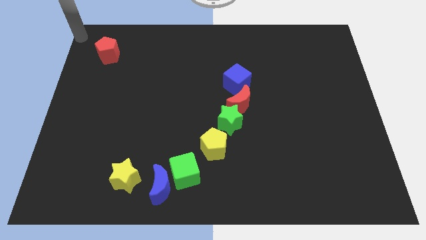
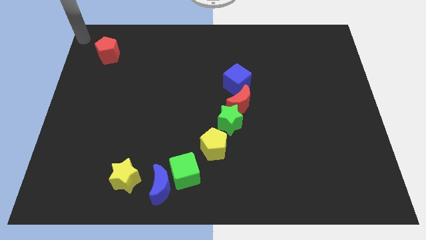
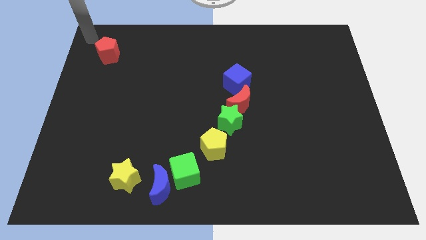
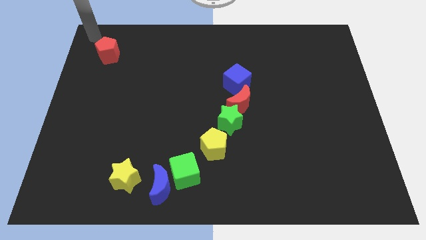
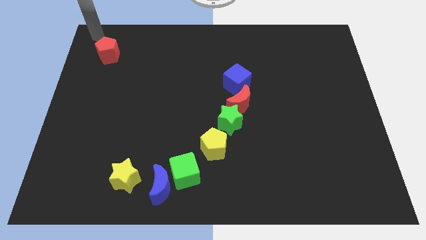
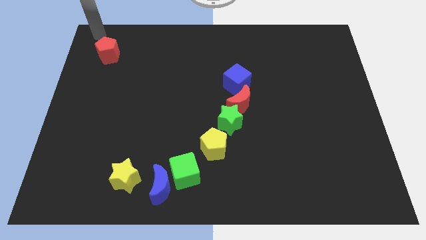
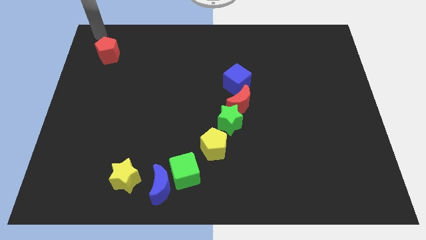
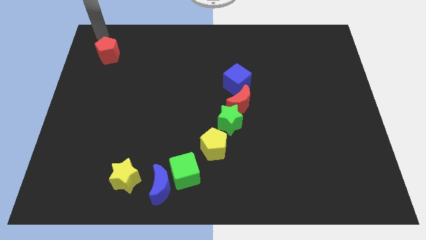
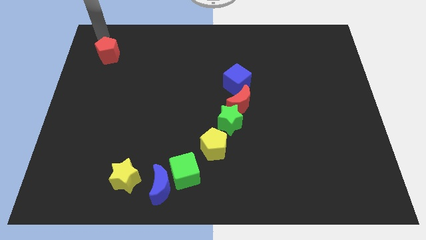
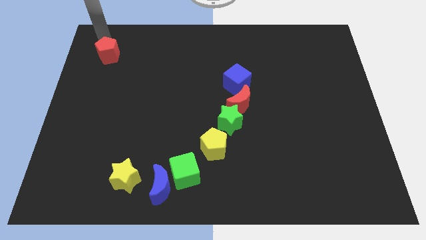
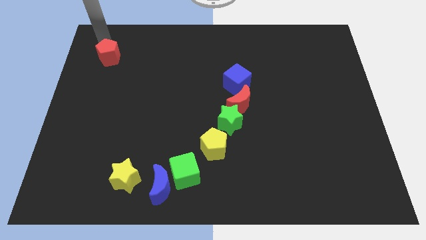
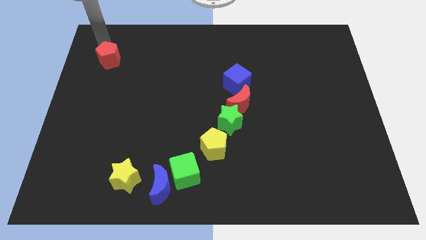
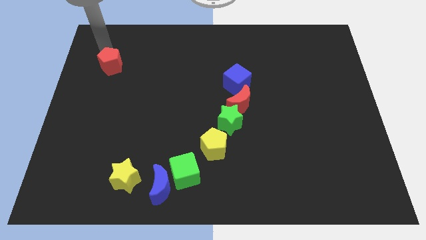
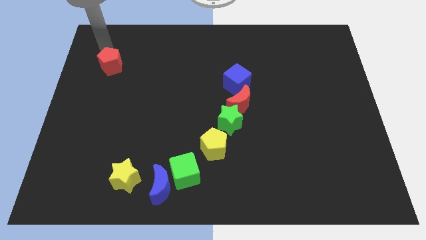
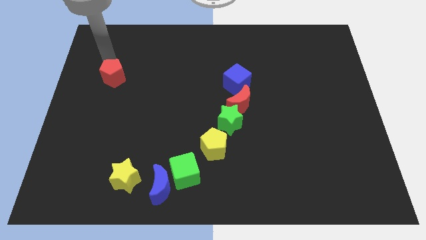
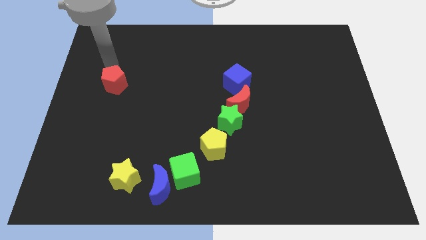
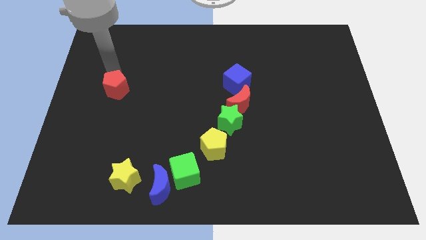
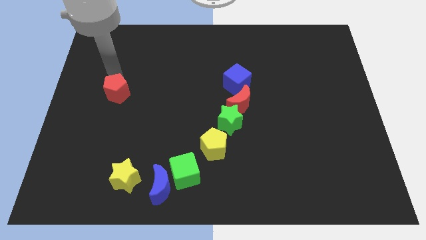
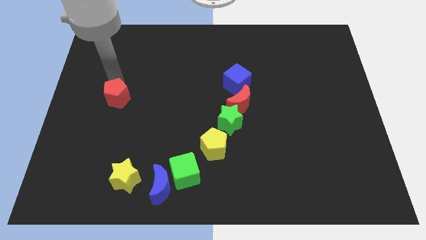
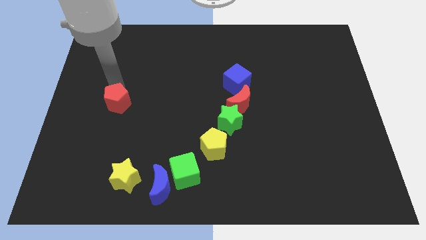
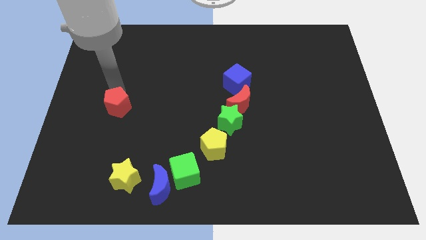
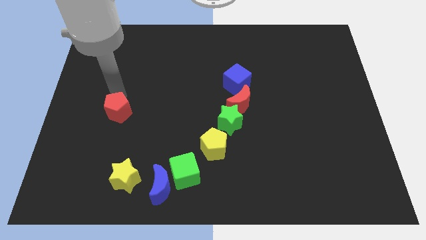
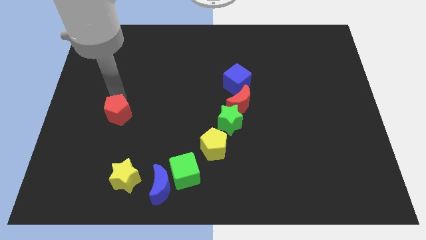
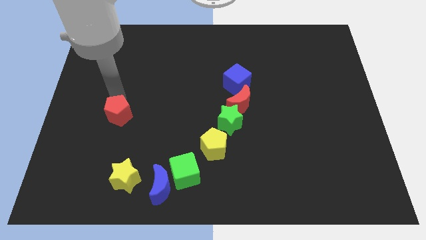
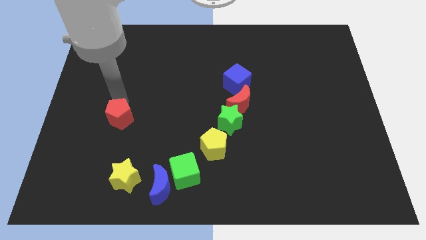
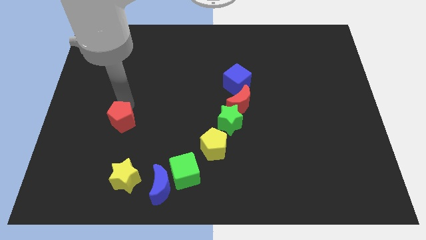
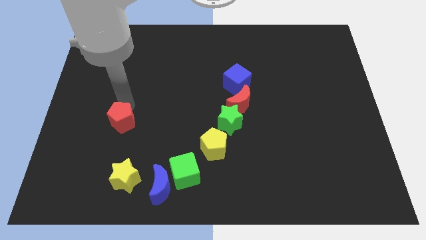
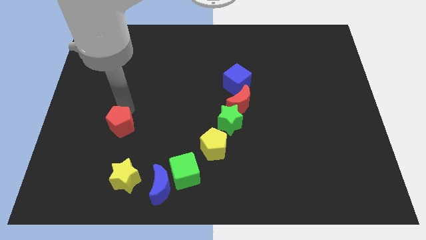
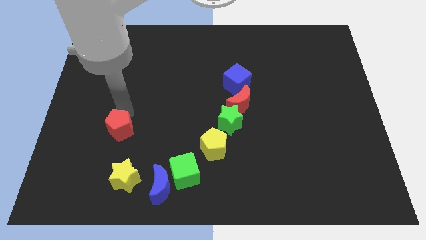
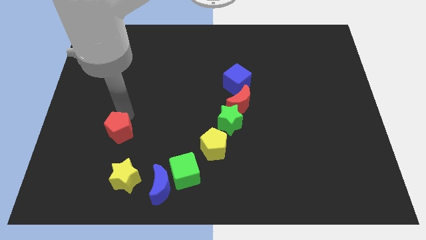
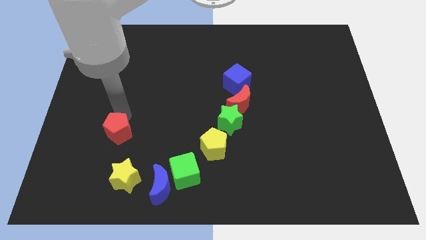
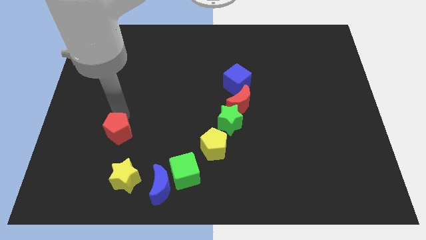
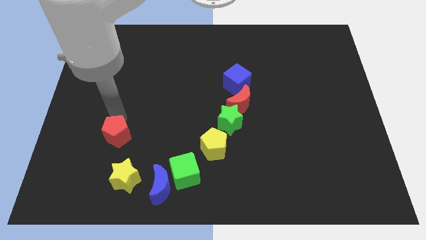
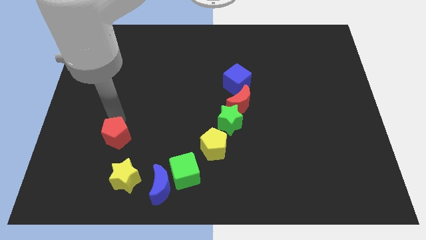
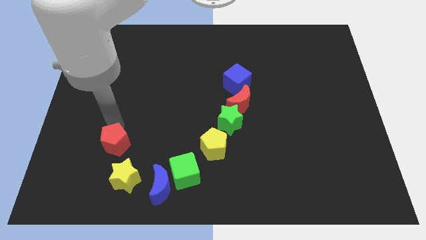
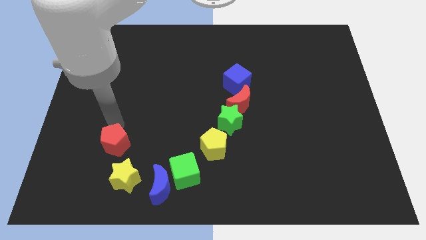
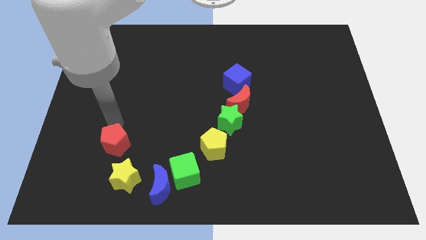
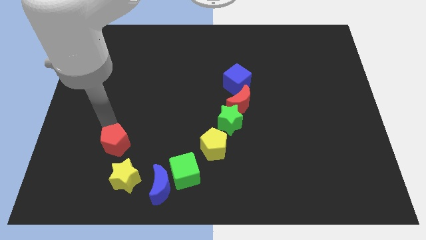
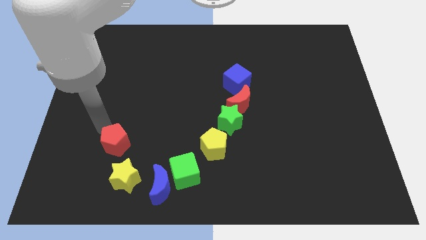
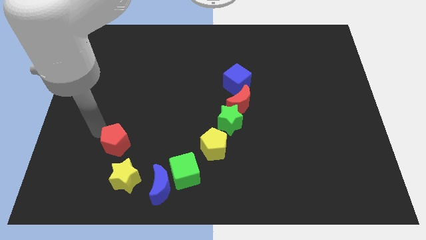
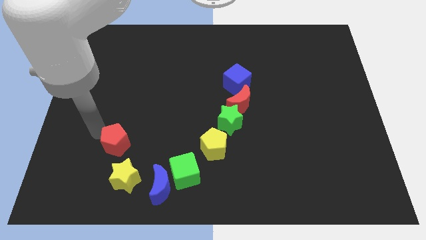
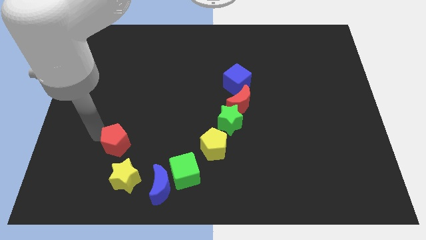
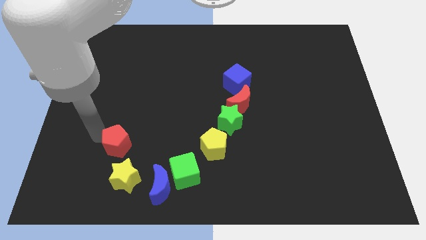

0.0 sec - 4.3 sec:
place the red pentagon above the yellow star

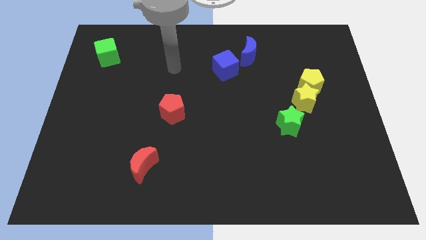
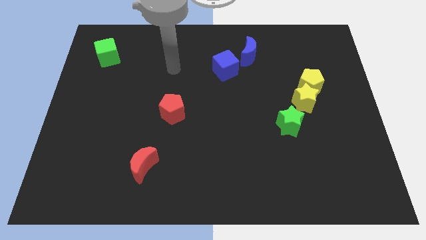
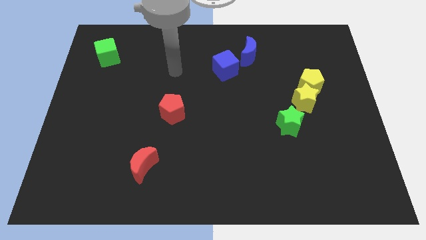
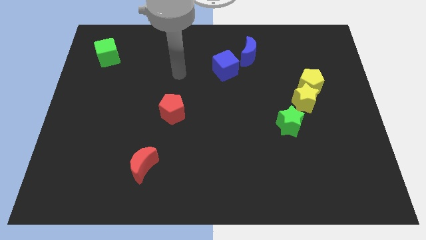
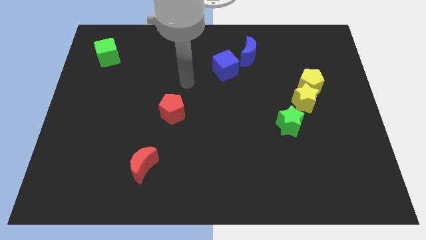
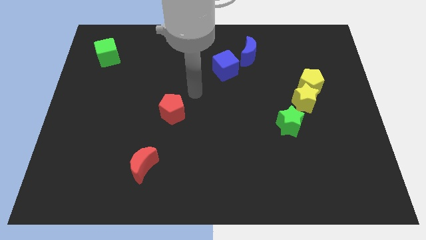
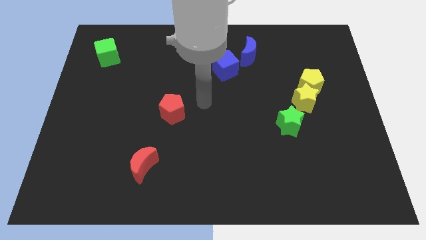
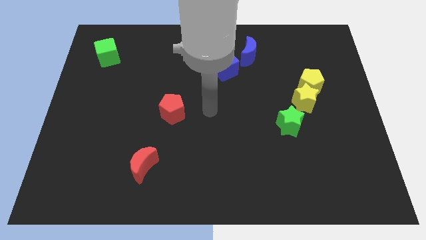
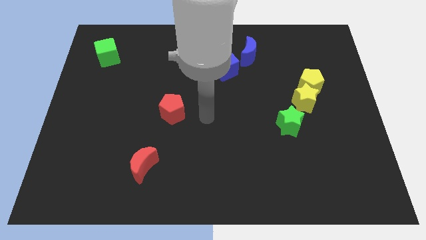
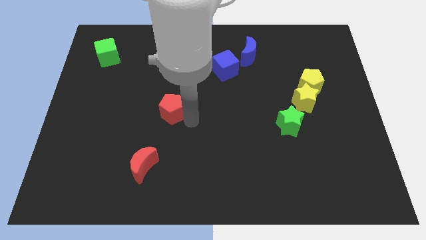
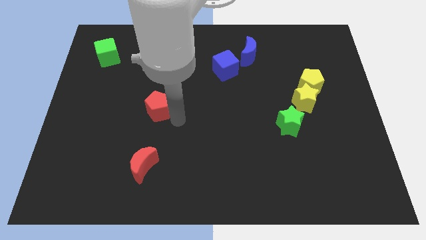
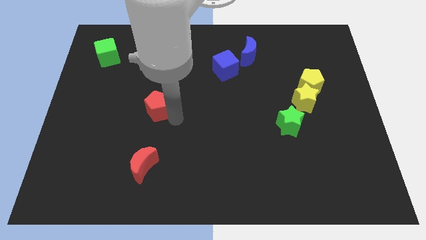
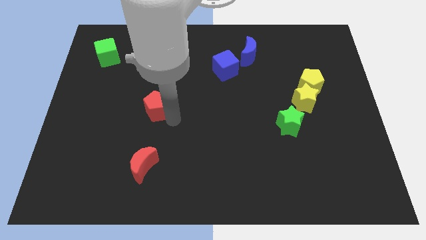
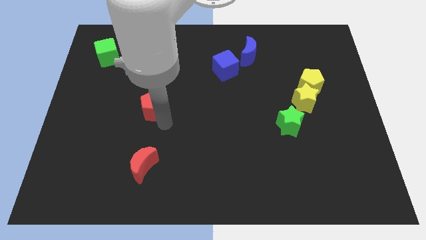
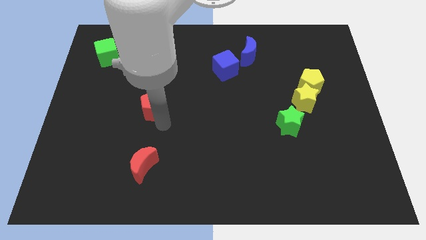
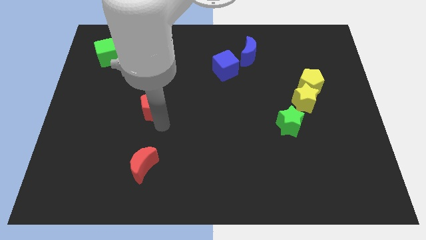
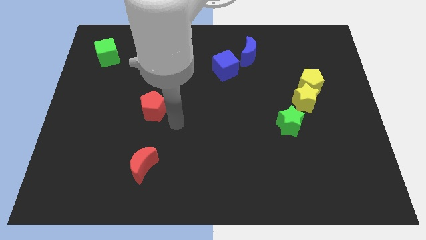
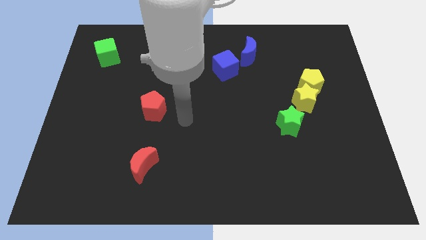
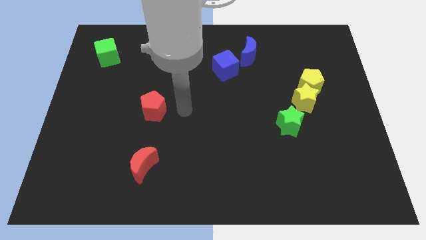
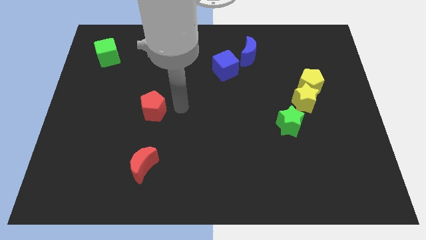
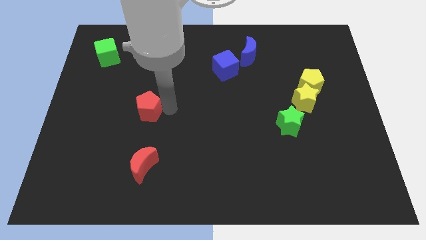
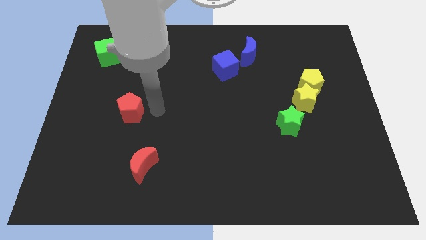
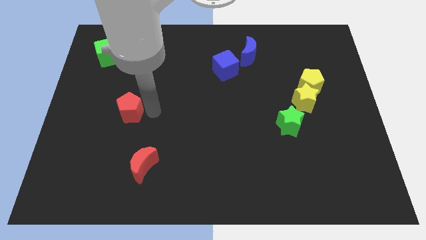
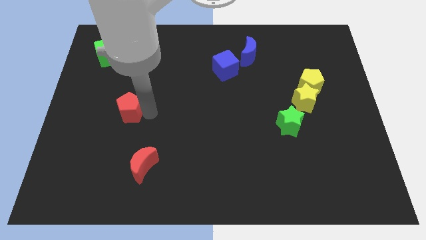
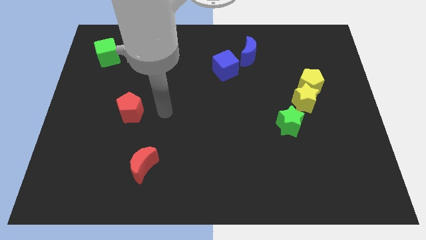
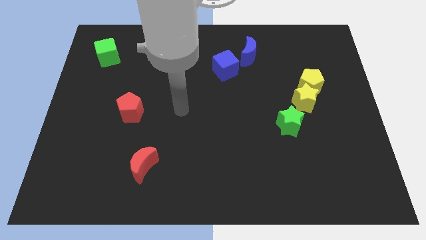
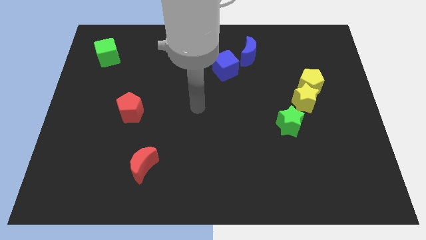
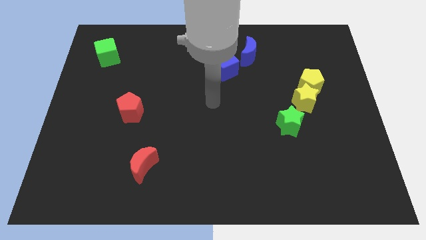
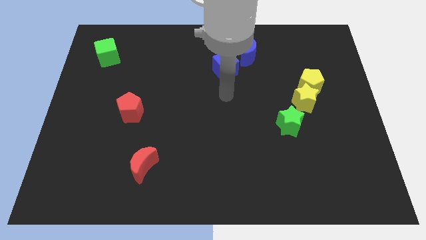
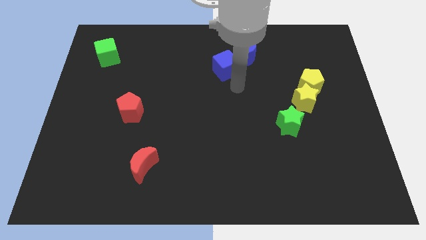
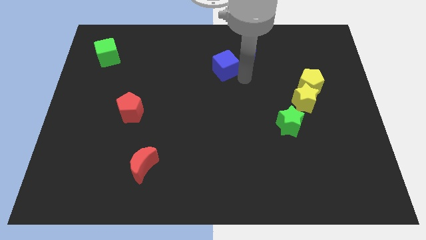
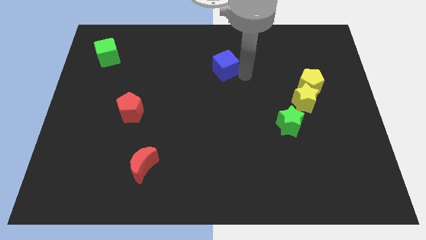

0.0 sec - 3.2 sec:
slightly push the red pentagon towards the left side

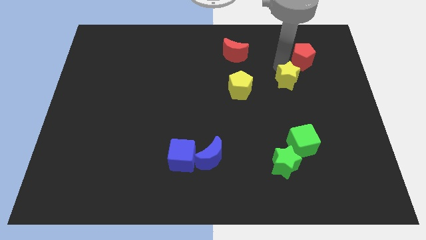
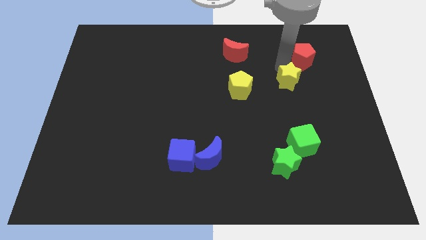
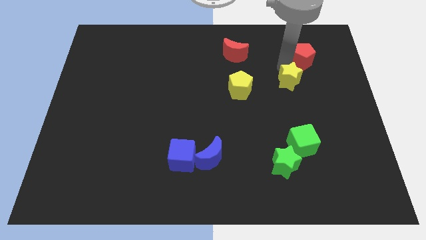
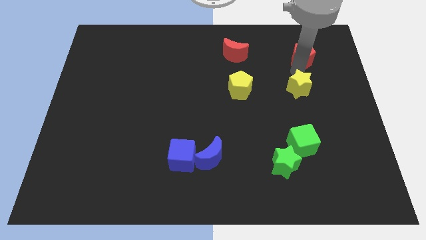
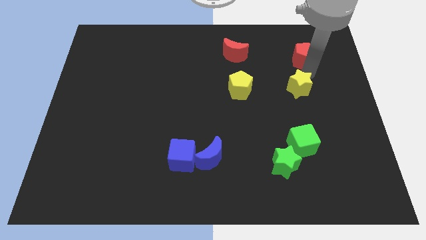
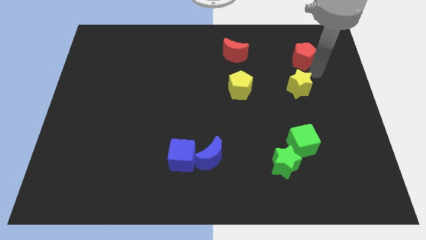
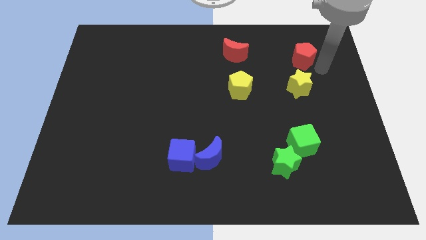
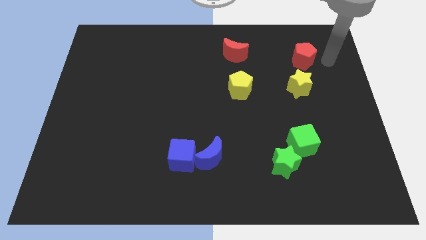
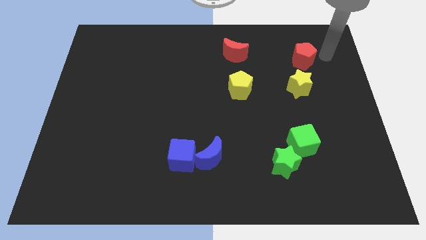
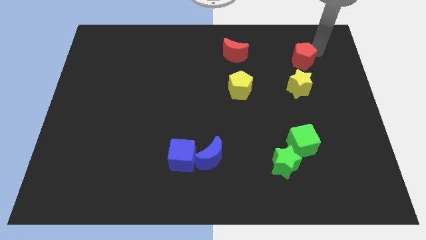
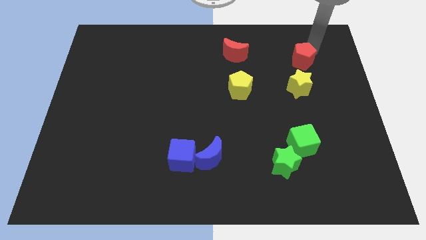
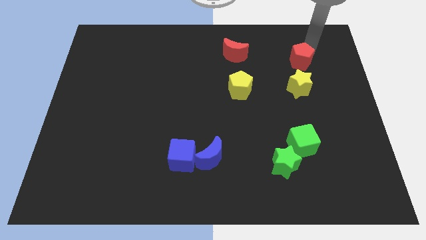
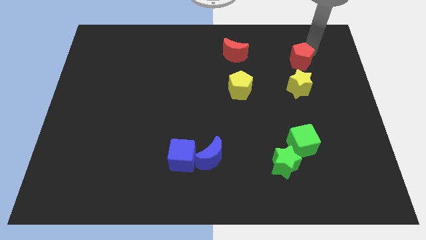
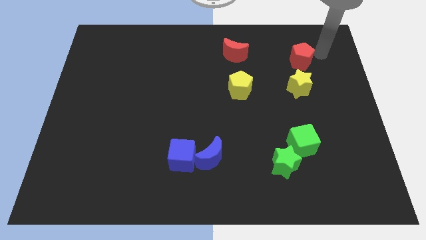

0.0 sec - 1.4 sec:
move the yellow star slightly down
